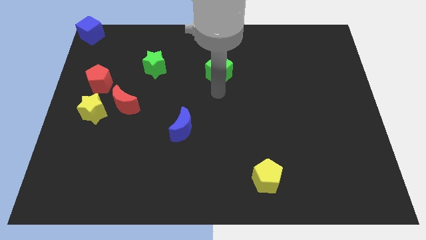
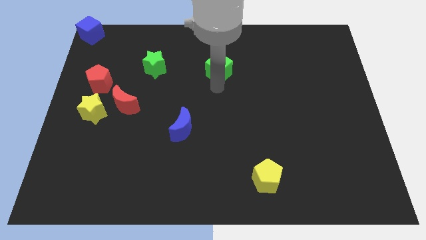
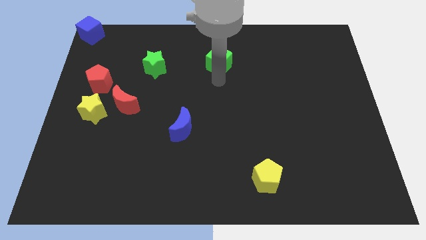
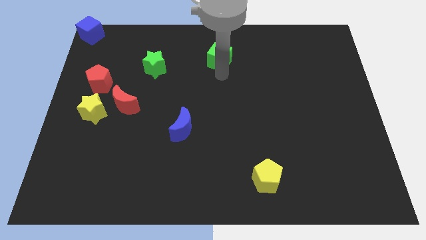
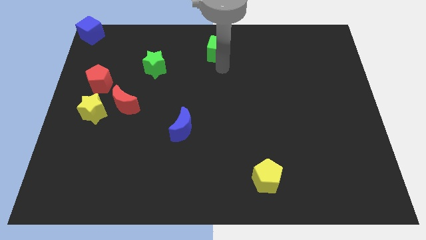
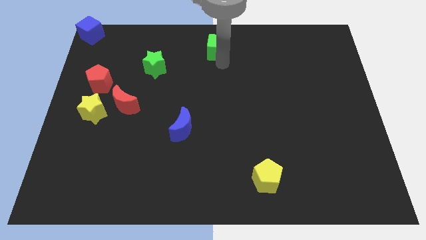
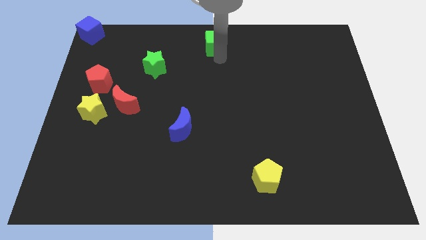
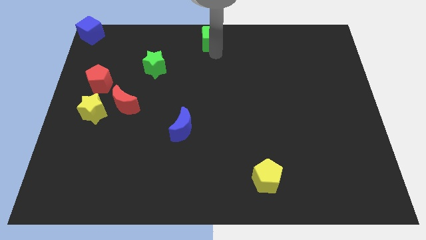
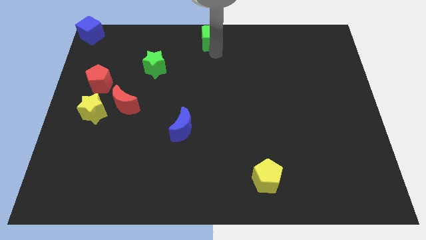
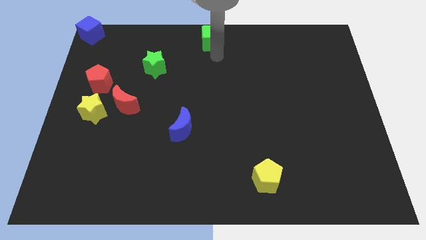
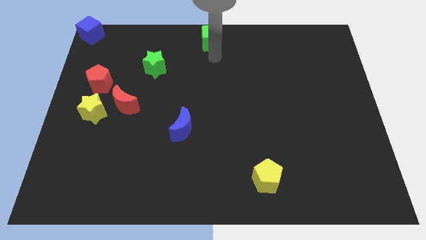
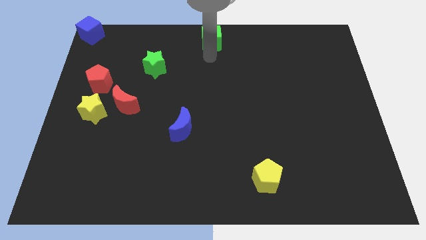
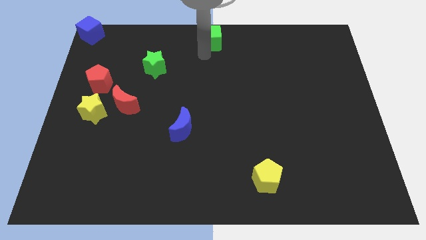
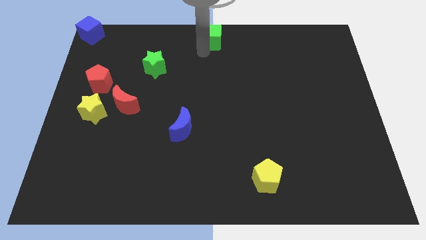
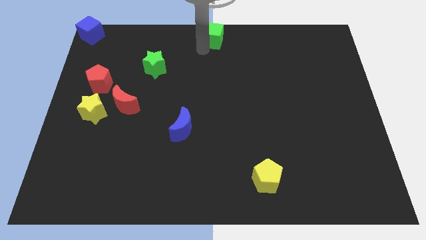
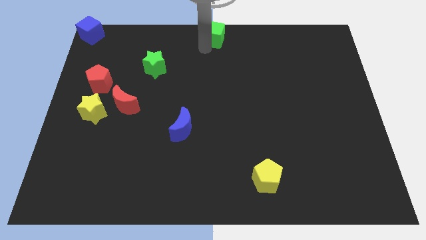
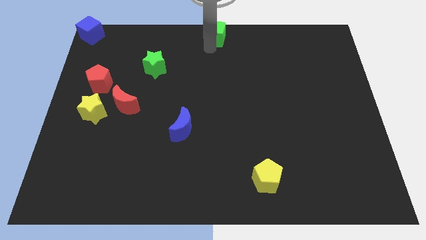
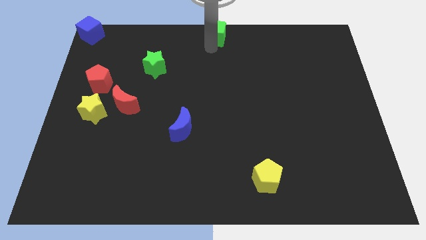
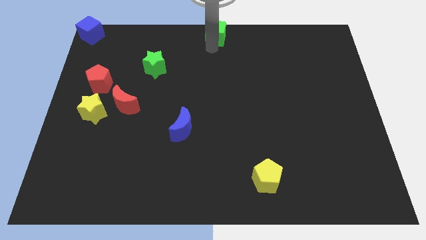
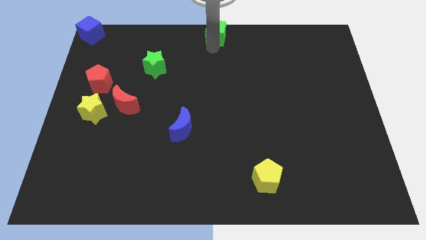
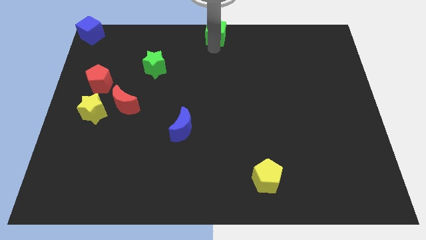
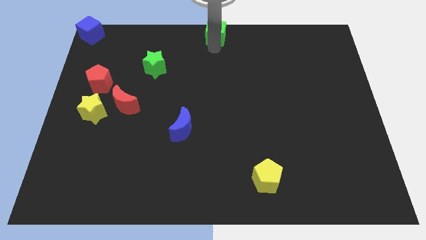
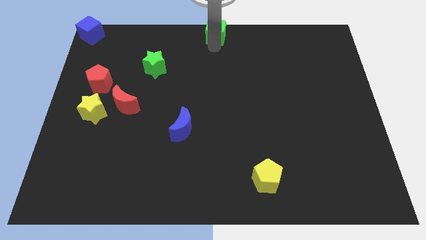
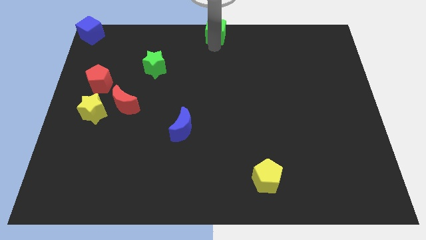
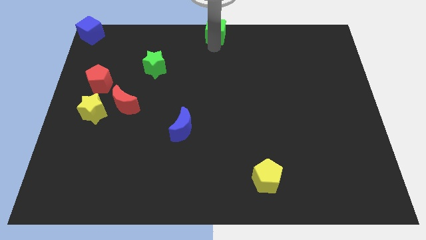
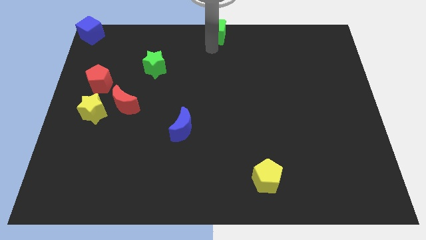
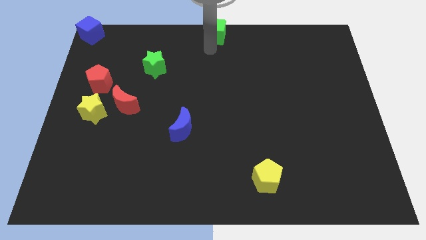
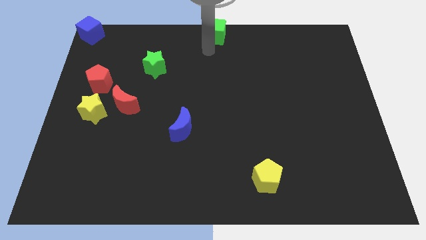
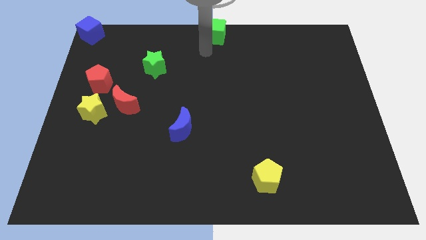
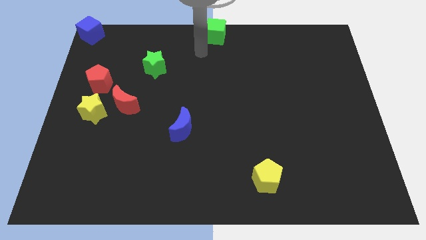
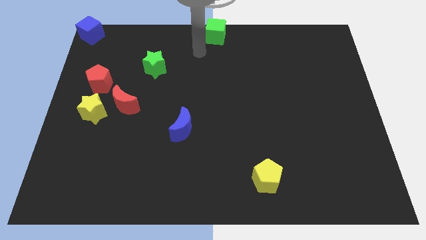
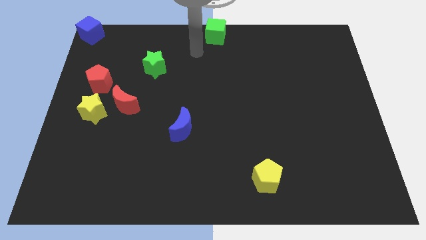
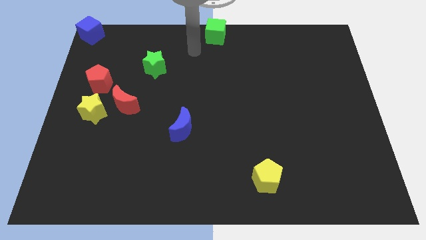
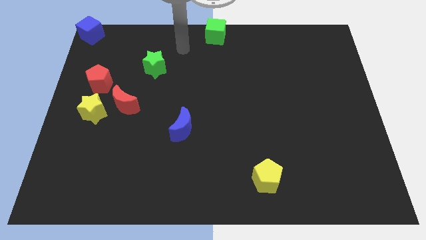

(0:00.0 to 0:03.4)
push the green cube to the top center

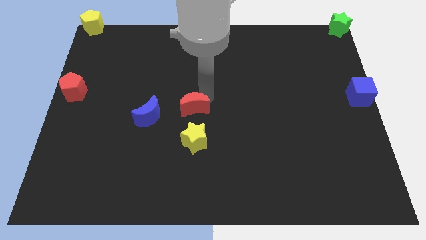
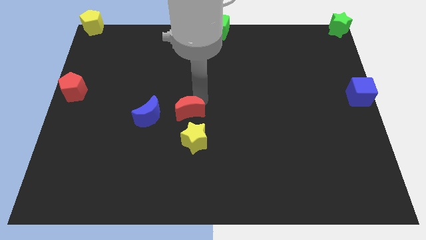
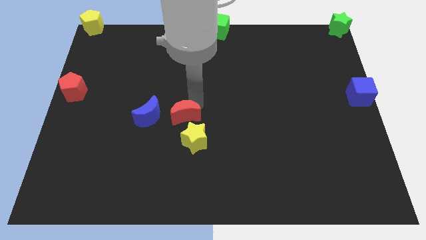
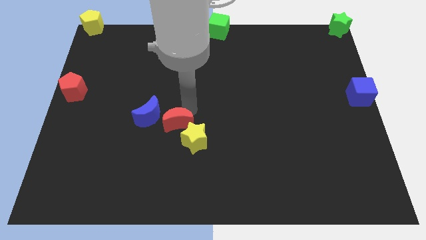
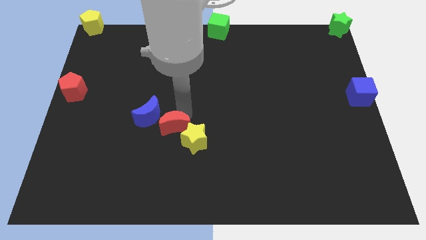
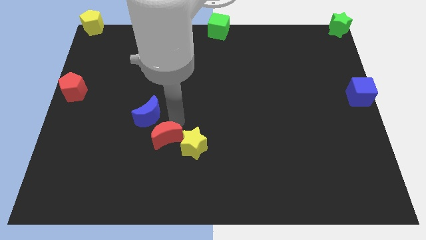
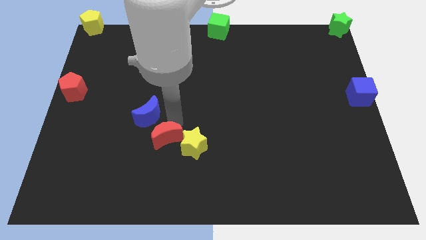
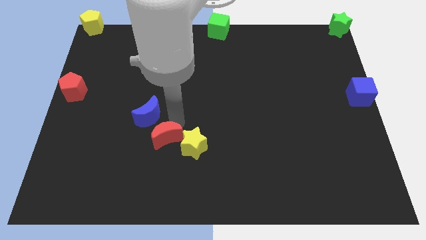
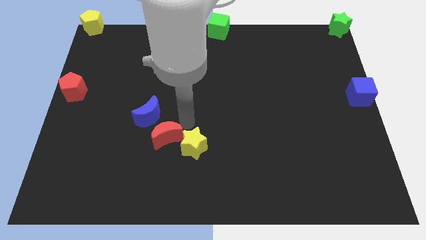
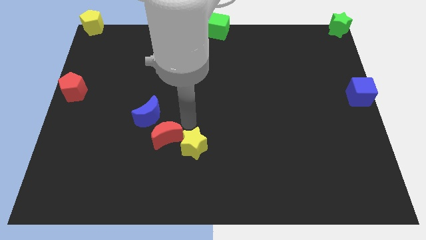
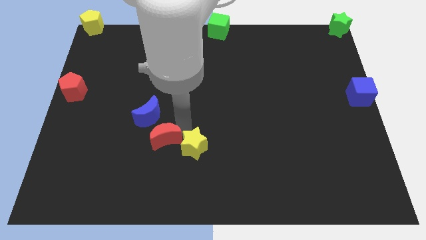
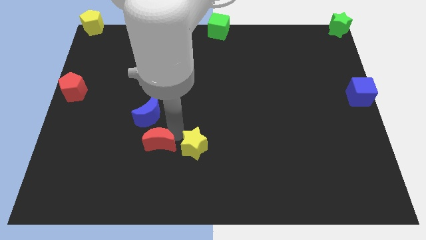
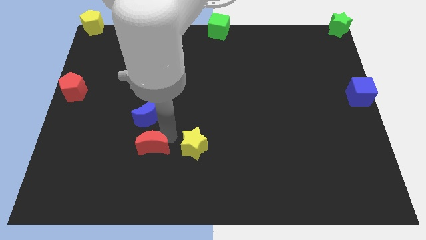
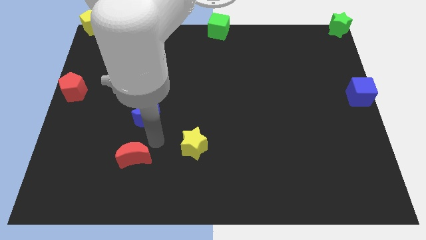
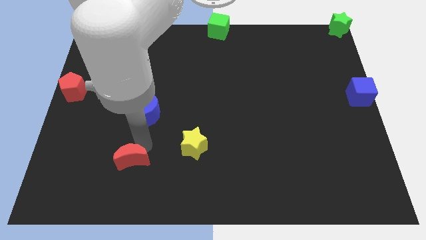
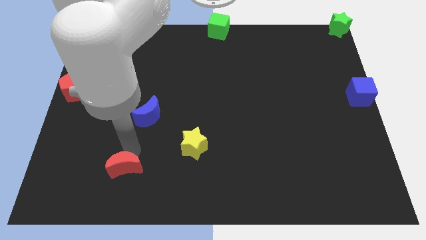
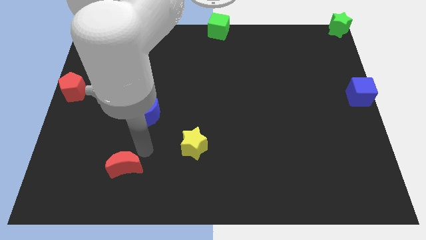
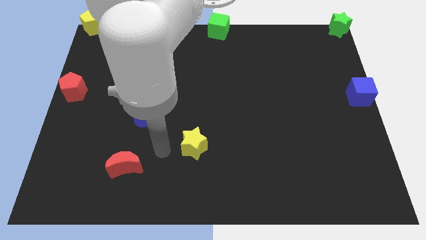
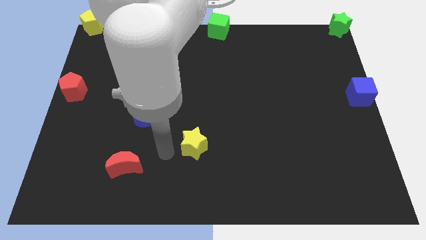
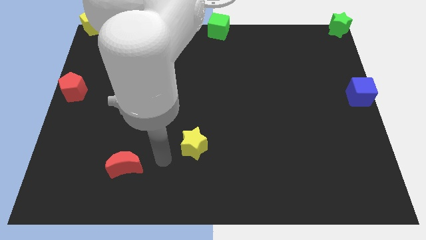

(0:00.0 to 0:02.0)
move the red crescent towards the bottom left side of the board

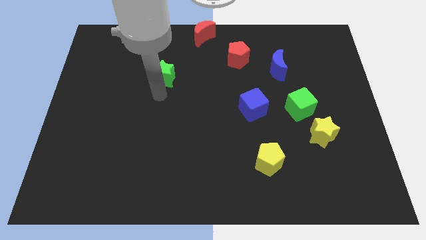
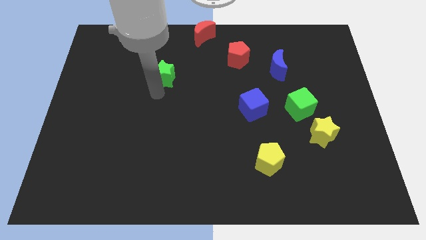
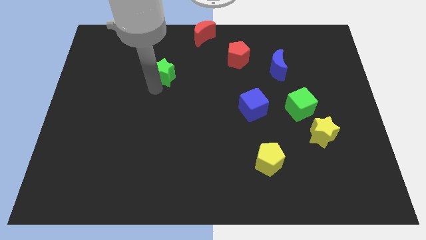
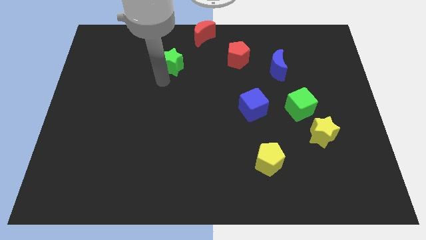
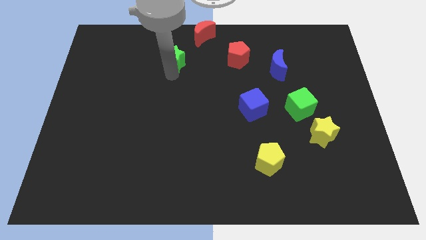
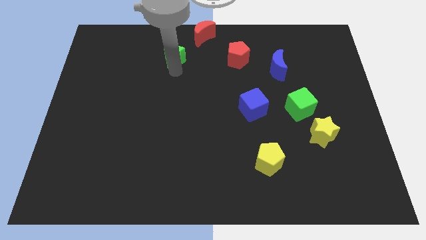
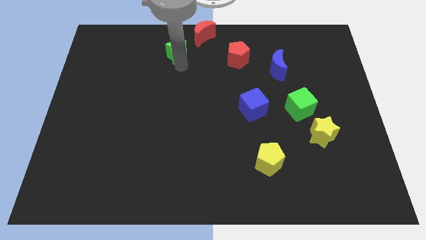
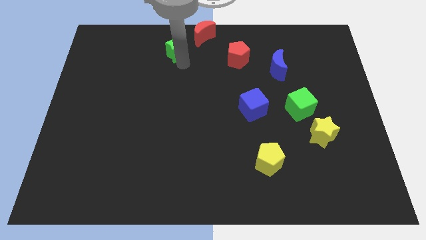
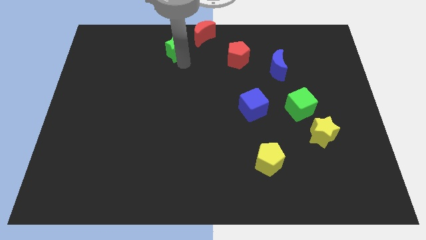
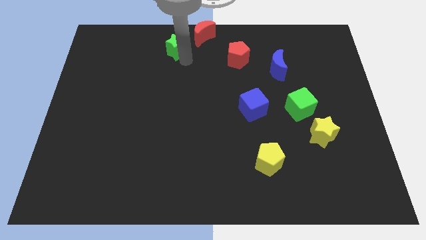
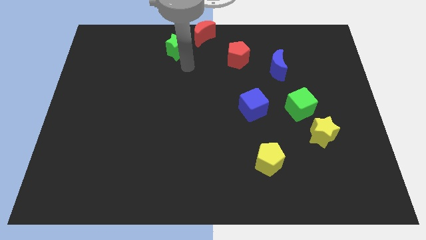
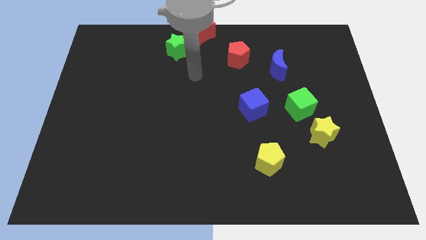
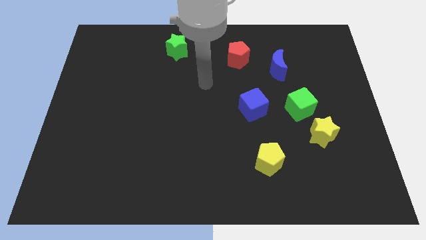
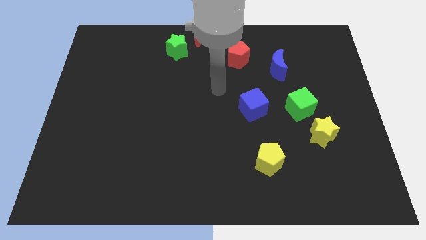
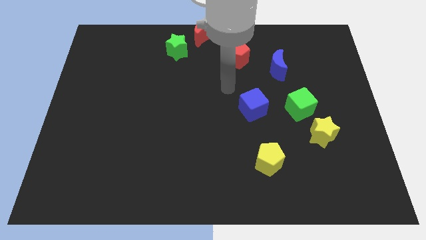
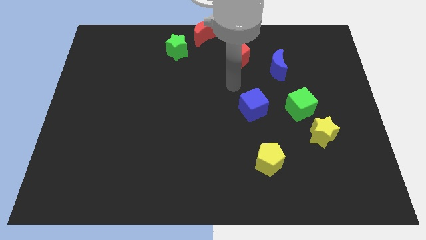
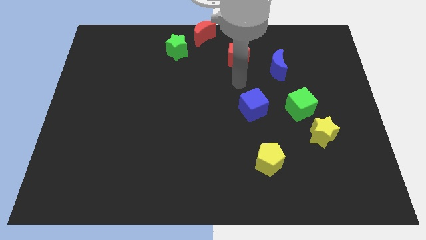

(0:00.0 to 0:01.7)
move green star to the top center

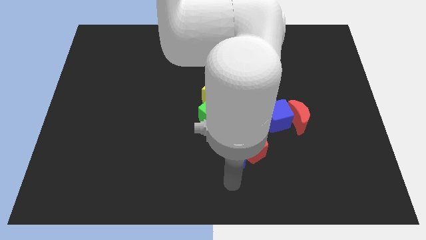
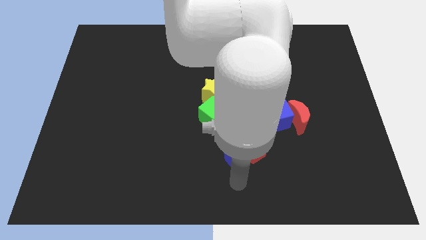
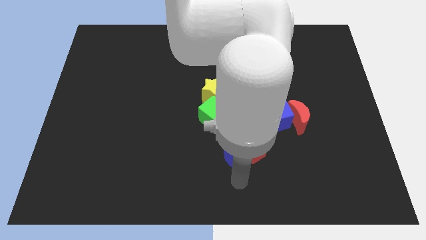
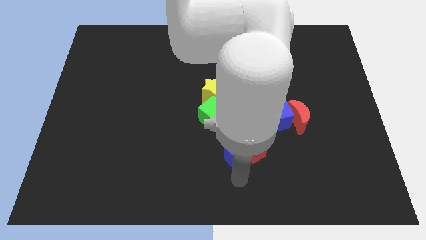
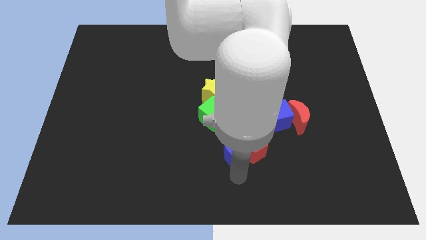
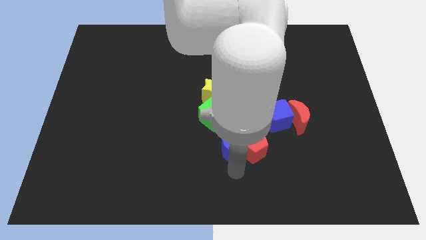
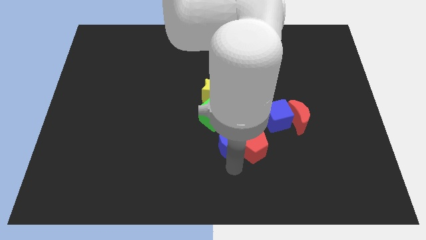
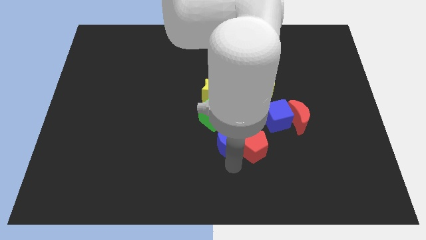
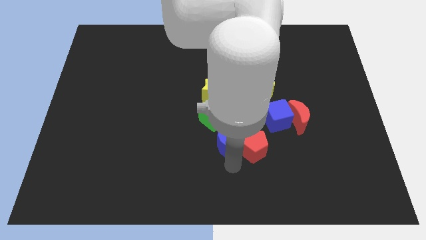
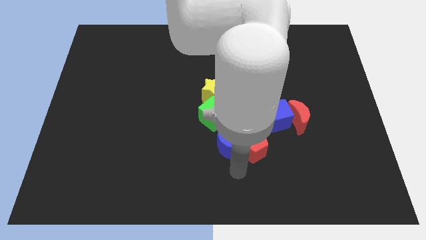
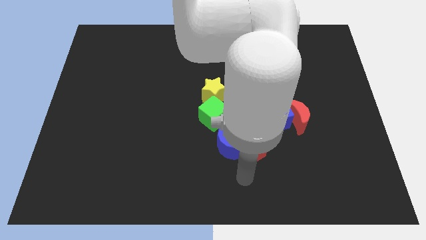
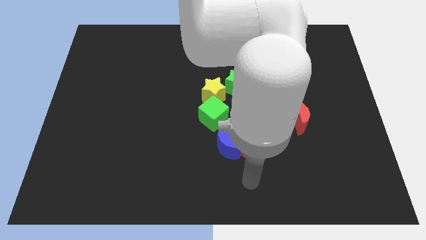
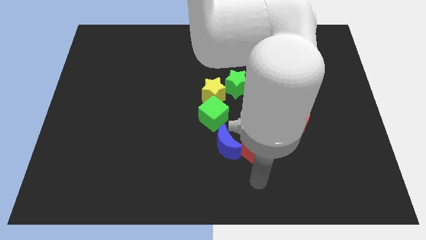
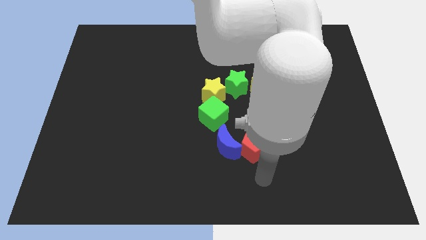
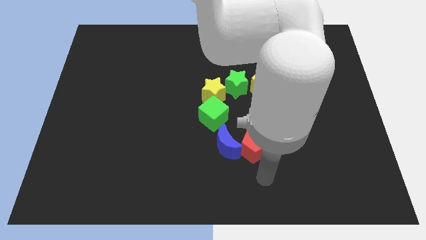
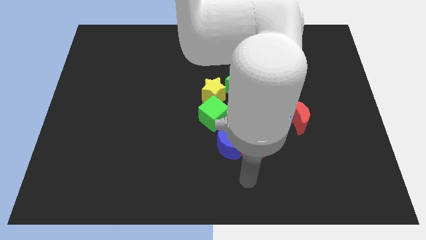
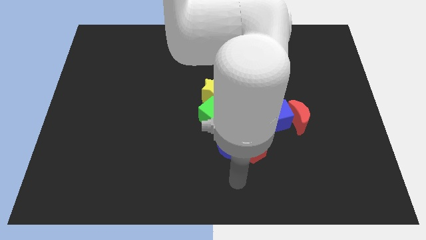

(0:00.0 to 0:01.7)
place the blue crescent below the green cube to form a vertical line

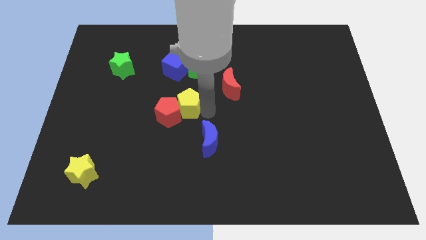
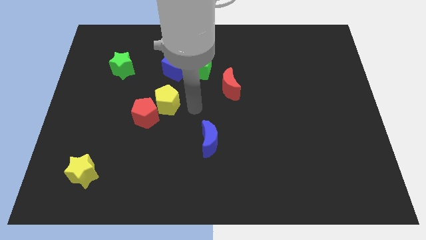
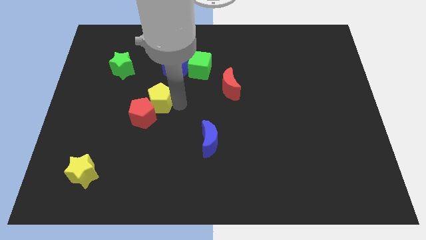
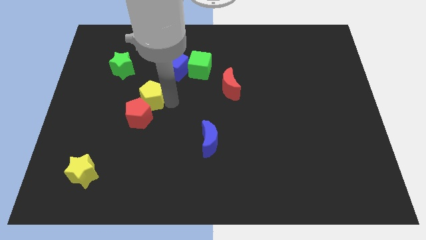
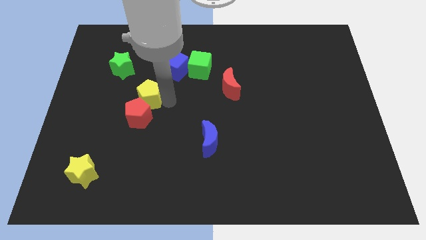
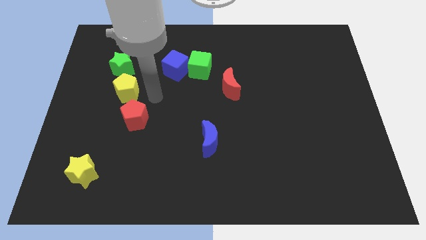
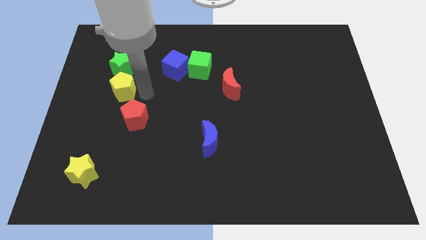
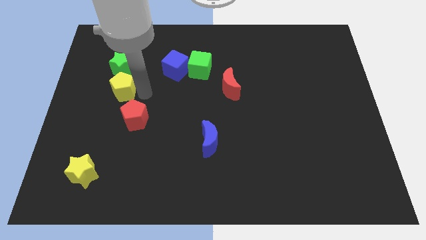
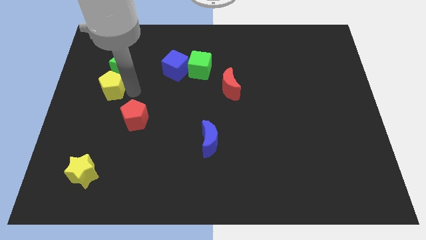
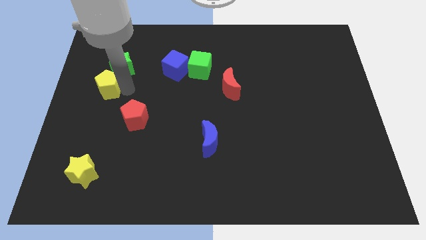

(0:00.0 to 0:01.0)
push the yellow pentagon to the bottom of green star
